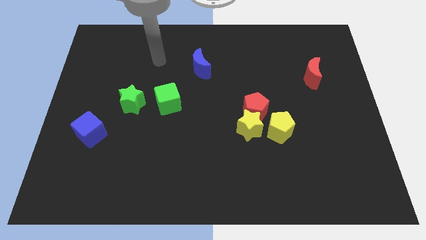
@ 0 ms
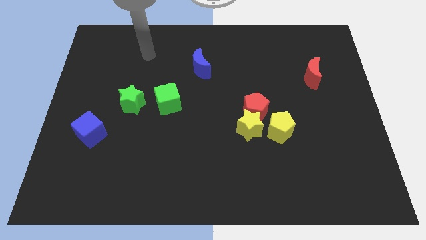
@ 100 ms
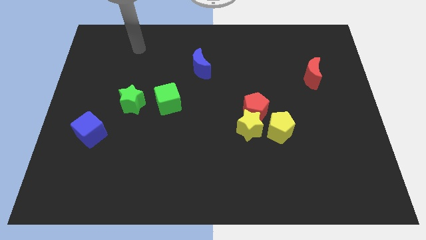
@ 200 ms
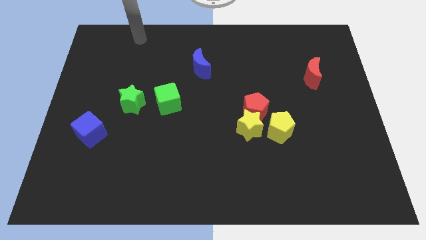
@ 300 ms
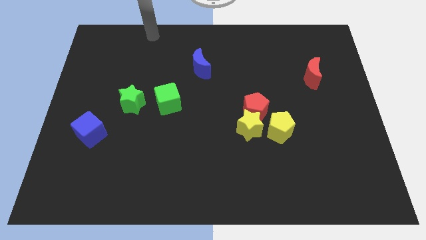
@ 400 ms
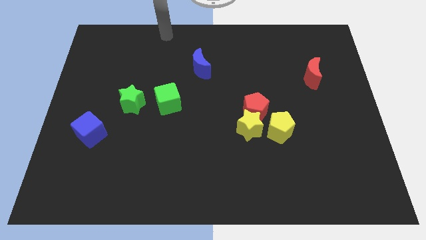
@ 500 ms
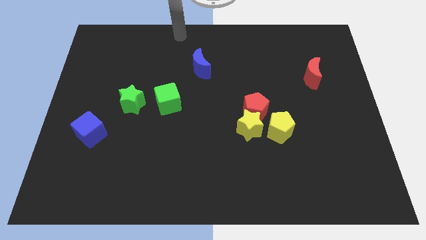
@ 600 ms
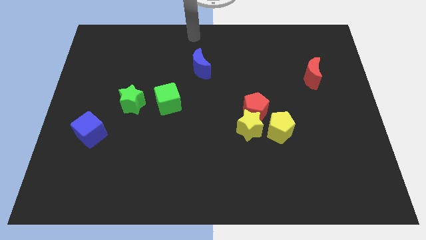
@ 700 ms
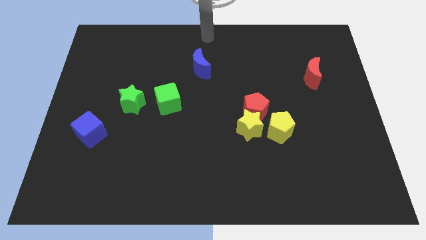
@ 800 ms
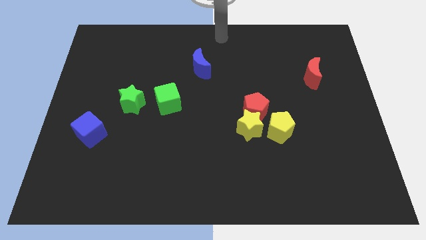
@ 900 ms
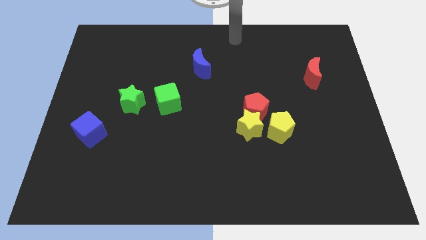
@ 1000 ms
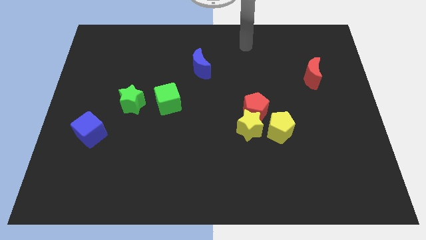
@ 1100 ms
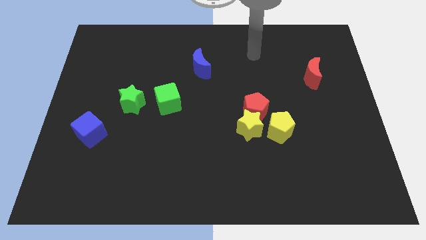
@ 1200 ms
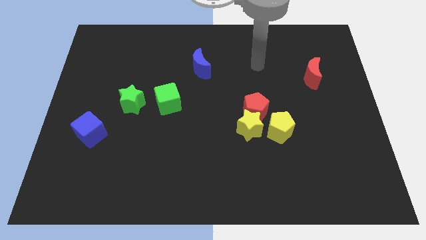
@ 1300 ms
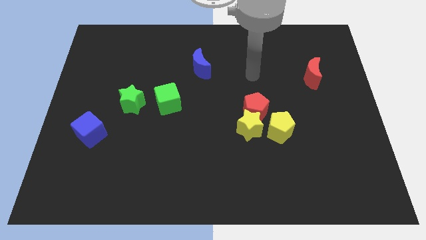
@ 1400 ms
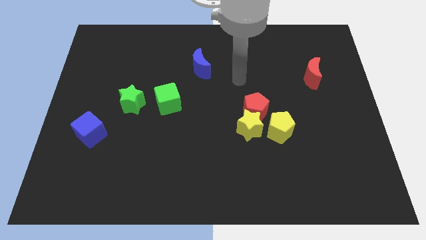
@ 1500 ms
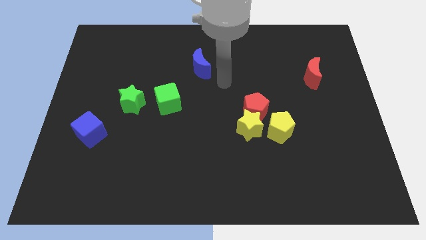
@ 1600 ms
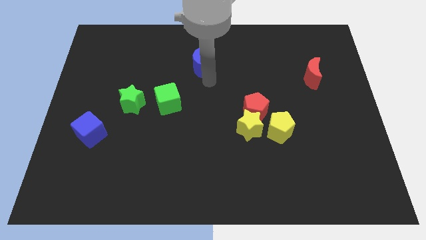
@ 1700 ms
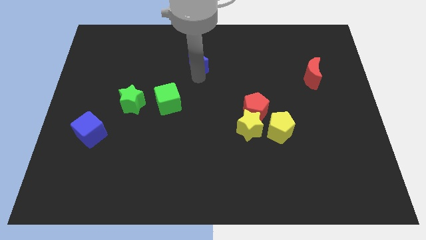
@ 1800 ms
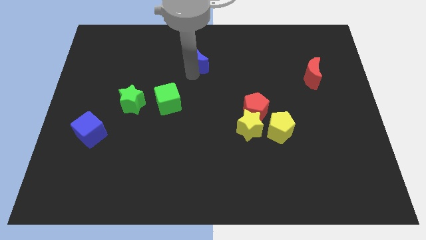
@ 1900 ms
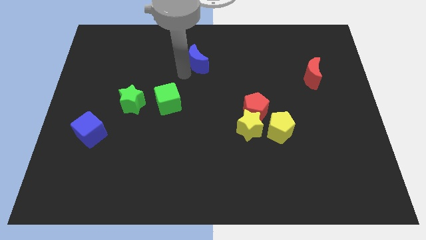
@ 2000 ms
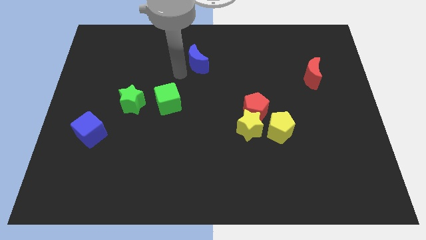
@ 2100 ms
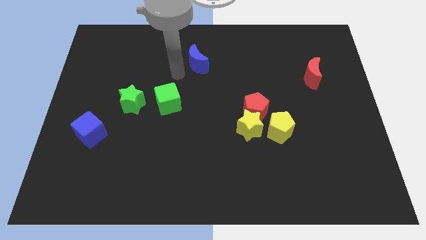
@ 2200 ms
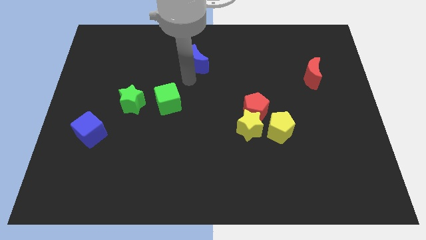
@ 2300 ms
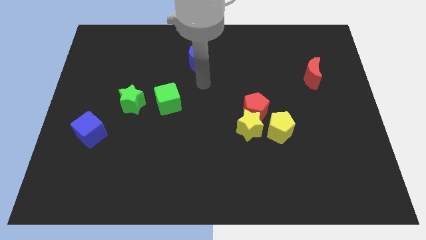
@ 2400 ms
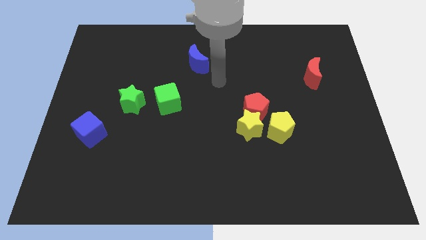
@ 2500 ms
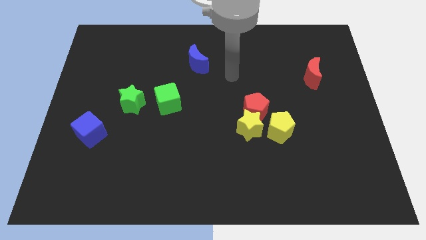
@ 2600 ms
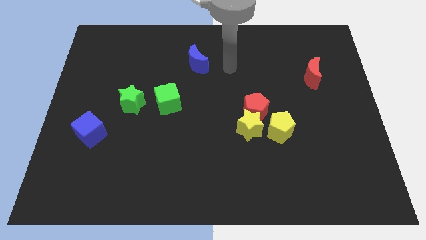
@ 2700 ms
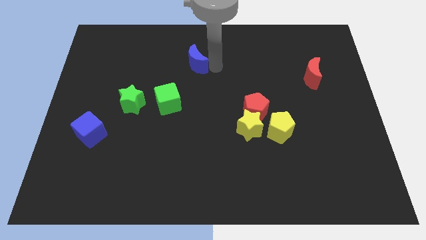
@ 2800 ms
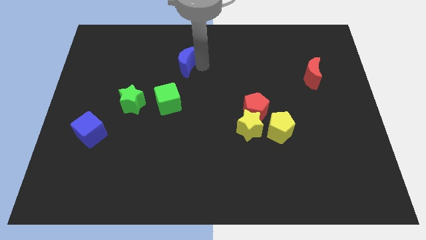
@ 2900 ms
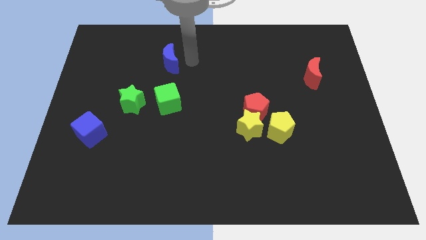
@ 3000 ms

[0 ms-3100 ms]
push the blue crescent to the left side of the table

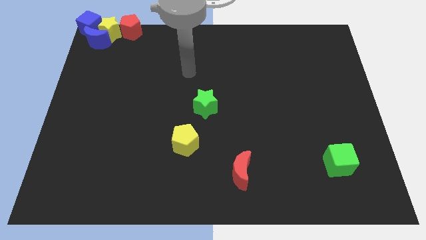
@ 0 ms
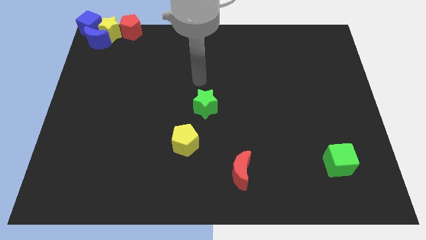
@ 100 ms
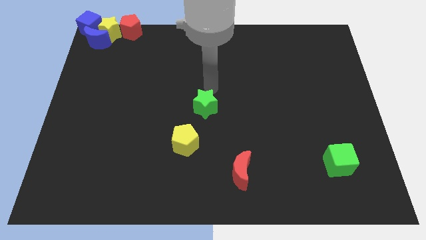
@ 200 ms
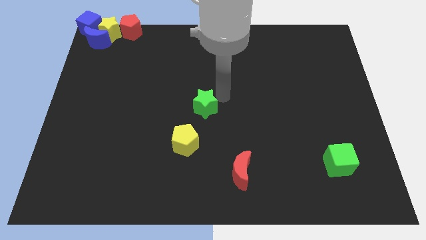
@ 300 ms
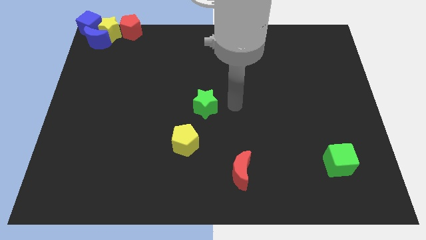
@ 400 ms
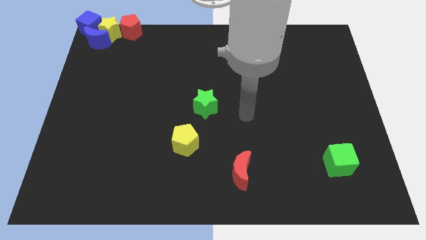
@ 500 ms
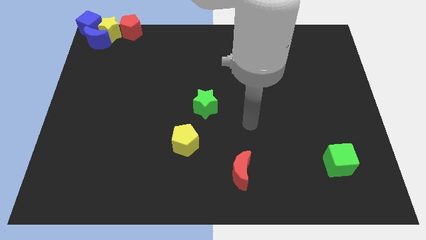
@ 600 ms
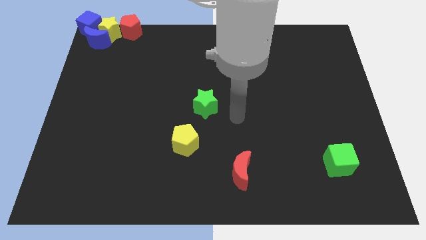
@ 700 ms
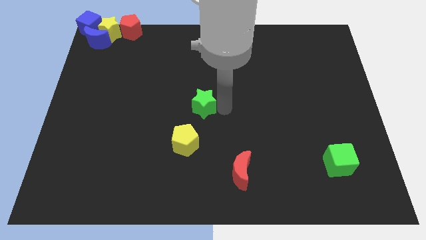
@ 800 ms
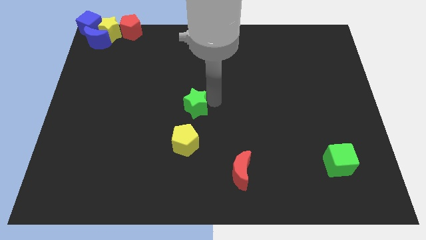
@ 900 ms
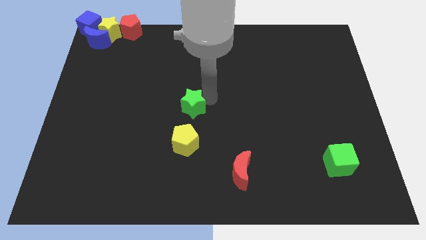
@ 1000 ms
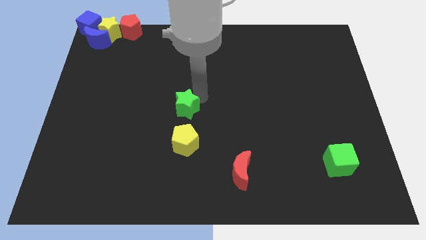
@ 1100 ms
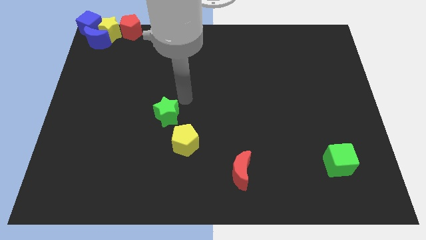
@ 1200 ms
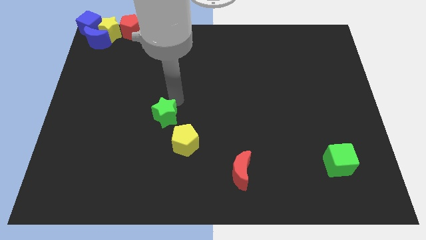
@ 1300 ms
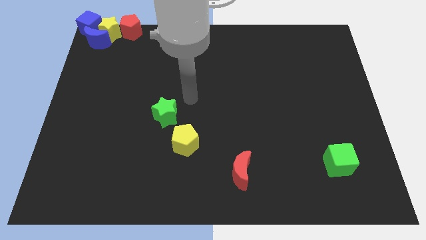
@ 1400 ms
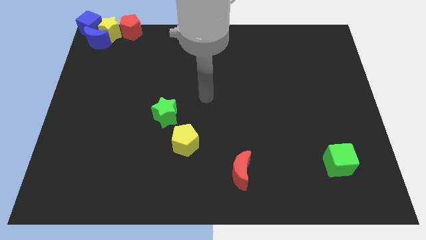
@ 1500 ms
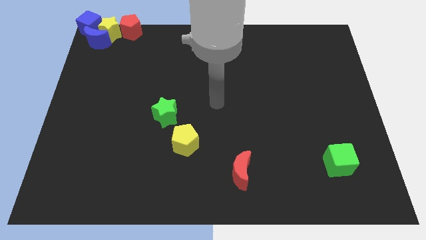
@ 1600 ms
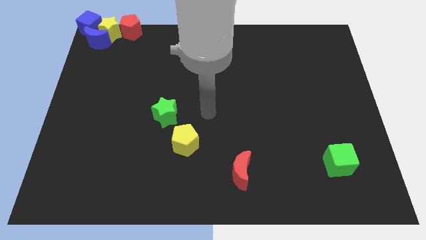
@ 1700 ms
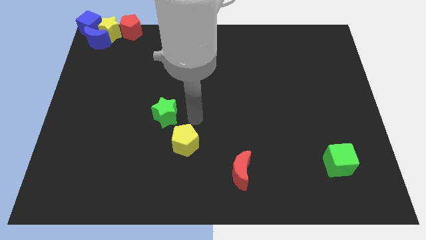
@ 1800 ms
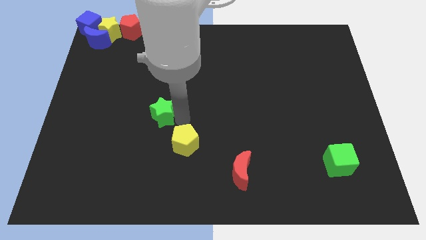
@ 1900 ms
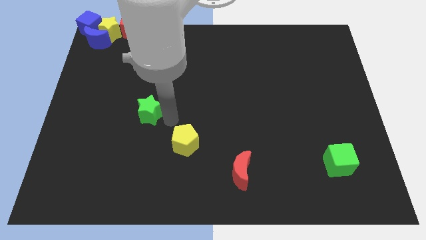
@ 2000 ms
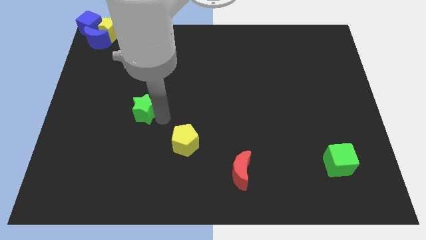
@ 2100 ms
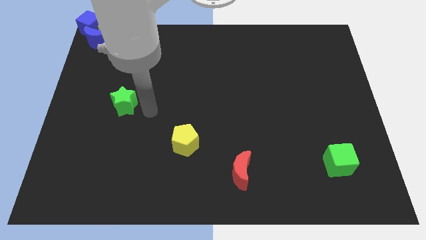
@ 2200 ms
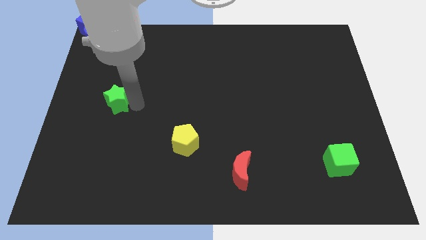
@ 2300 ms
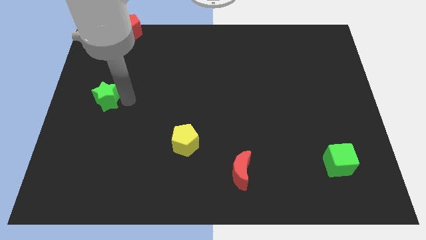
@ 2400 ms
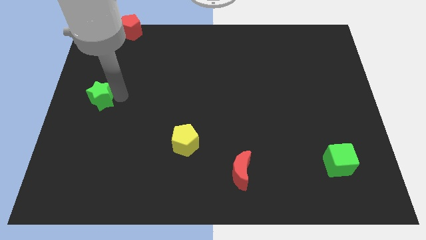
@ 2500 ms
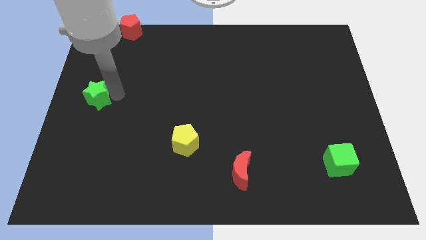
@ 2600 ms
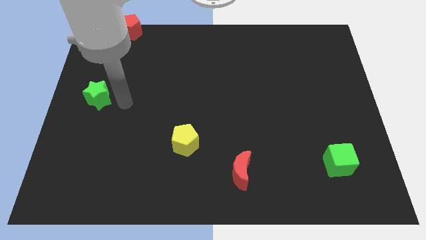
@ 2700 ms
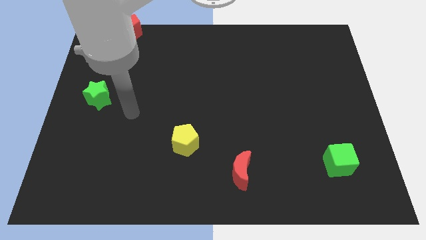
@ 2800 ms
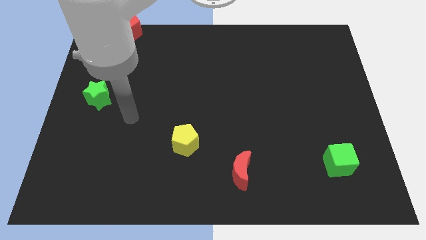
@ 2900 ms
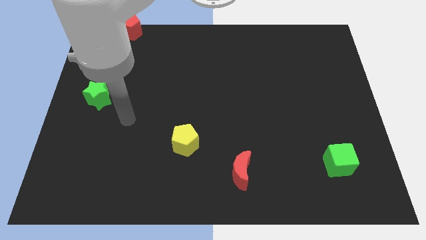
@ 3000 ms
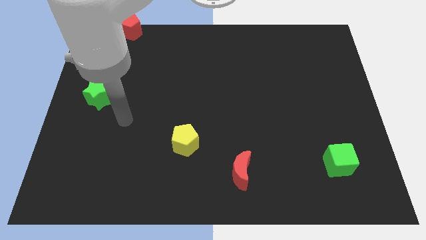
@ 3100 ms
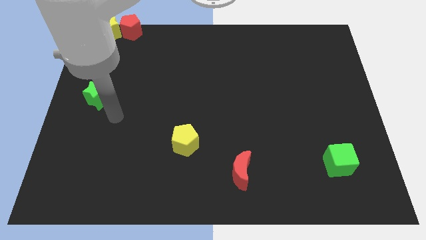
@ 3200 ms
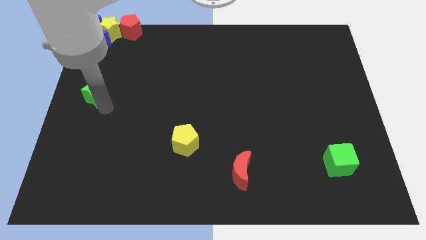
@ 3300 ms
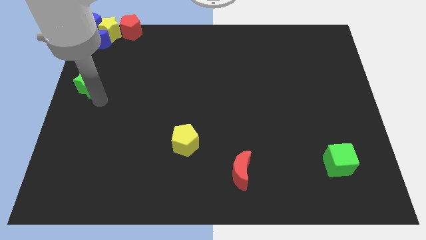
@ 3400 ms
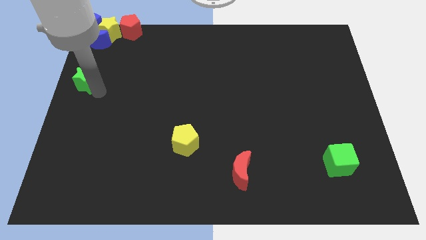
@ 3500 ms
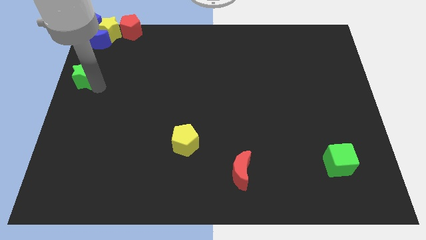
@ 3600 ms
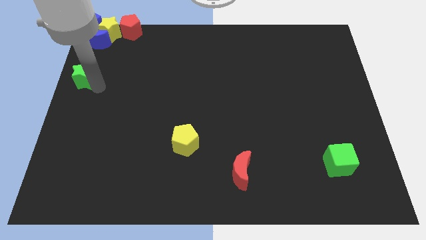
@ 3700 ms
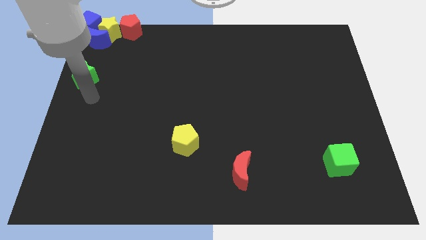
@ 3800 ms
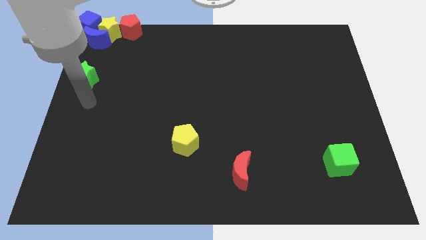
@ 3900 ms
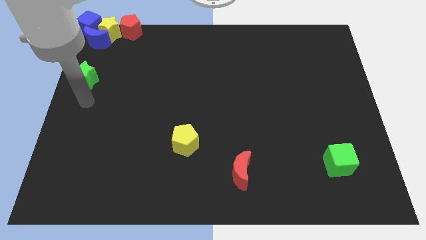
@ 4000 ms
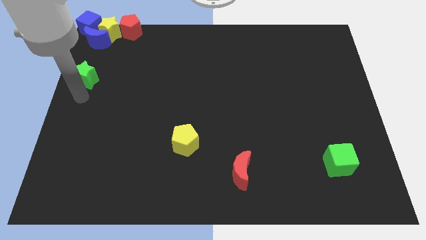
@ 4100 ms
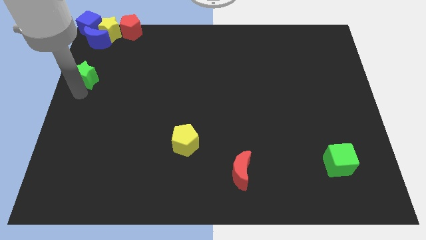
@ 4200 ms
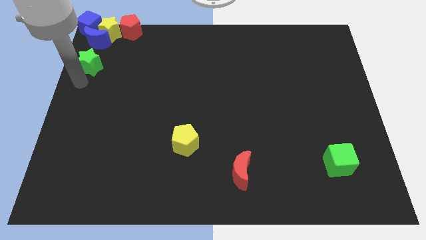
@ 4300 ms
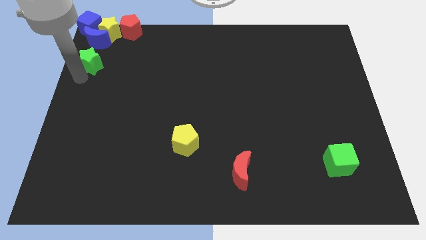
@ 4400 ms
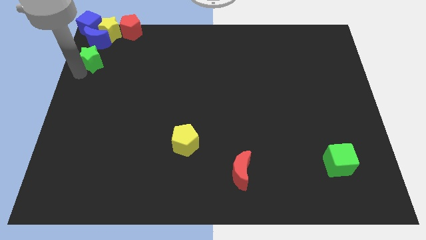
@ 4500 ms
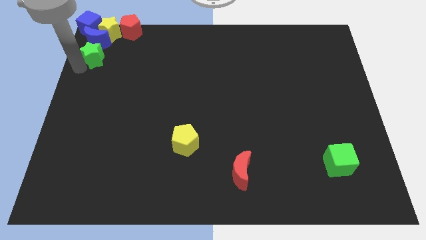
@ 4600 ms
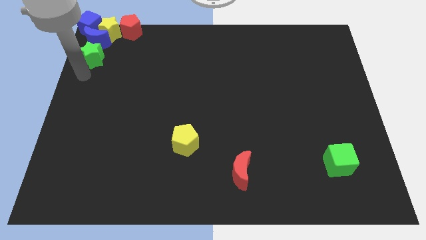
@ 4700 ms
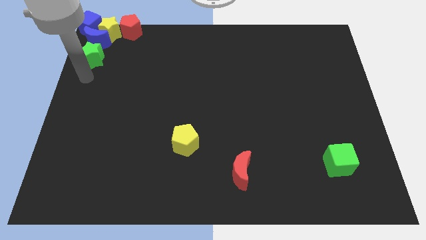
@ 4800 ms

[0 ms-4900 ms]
push the green star to the bottom of the blue crescent

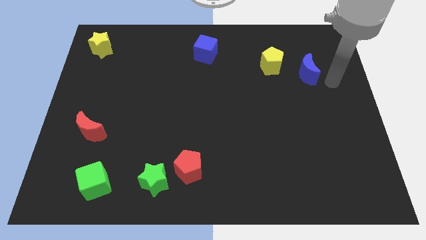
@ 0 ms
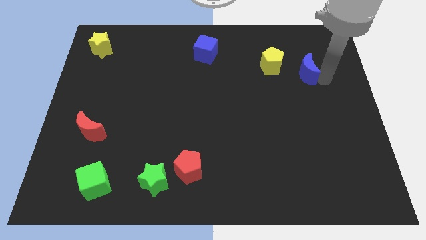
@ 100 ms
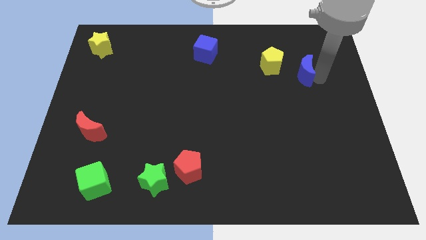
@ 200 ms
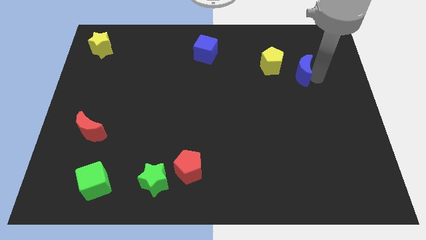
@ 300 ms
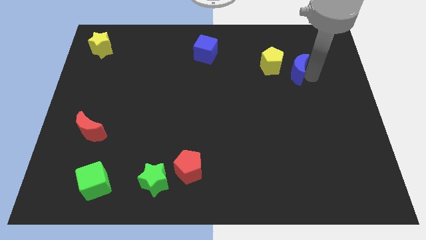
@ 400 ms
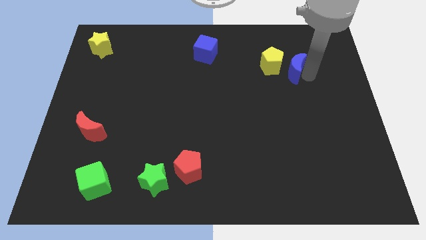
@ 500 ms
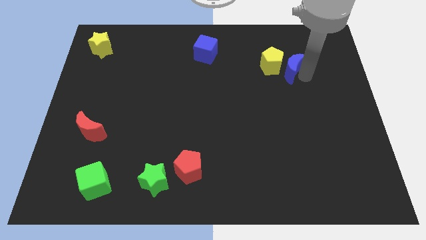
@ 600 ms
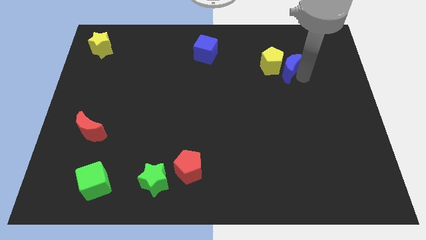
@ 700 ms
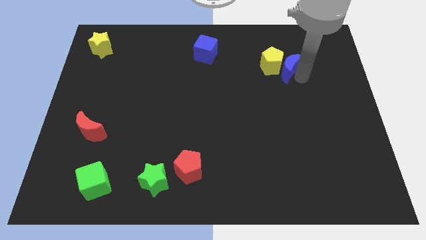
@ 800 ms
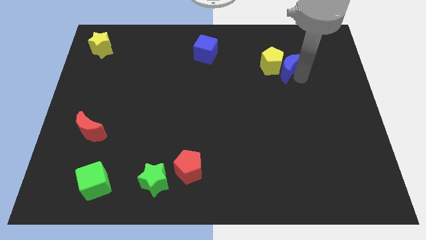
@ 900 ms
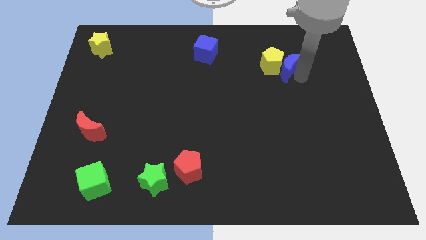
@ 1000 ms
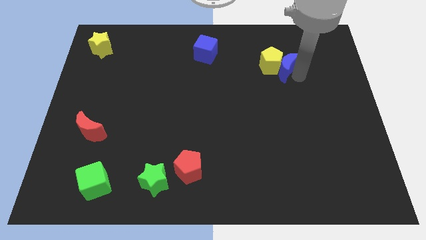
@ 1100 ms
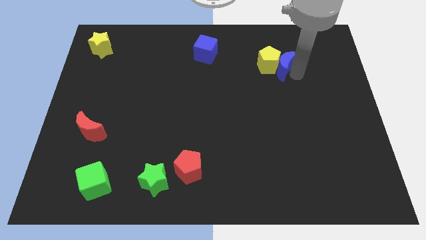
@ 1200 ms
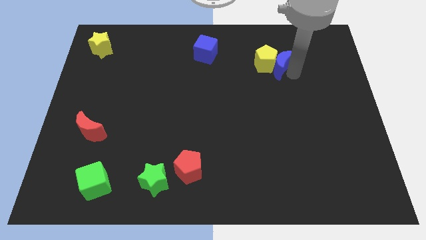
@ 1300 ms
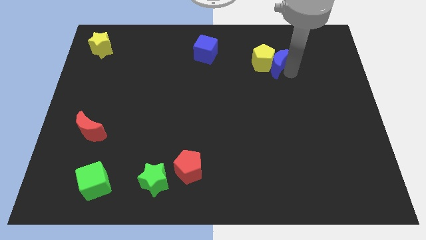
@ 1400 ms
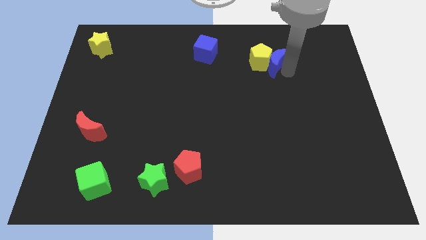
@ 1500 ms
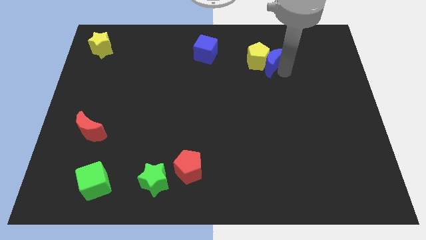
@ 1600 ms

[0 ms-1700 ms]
move the blue crescent into the yellow pentagon
